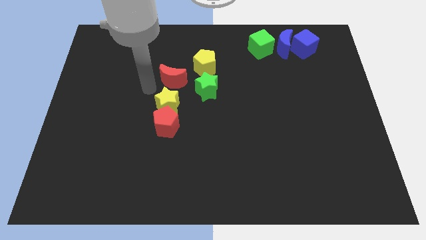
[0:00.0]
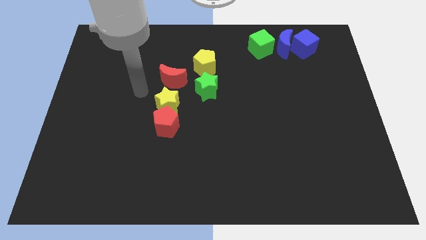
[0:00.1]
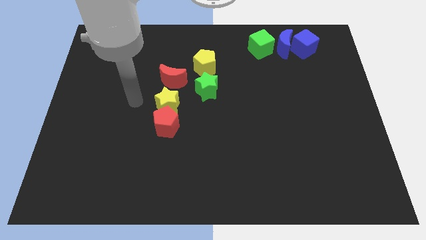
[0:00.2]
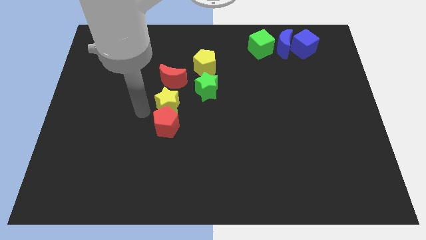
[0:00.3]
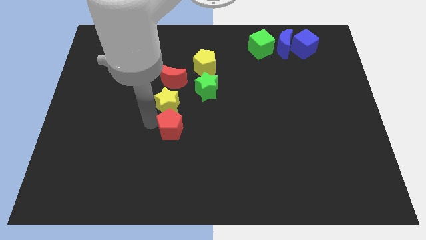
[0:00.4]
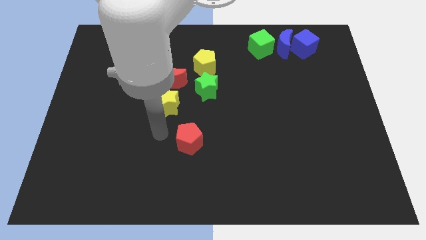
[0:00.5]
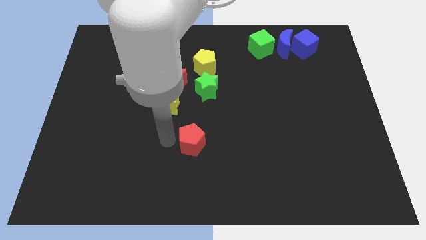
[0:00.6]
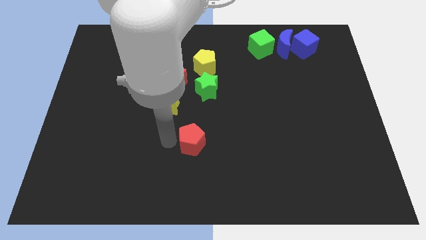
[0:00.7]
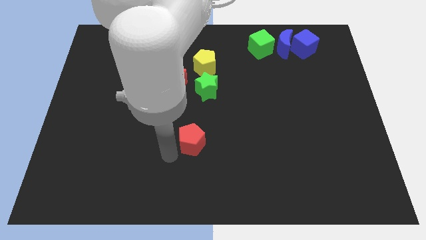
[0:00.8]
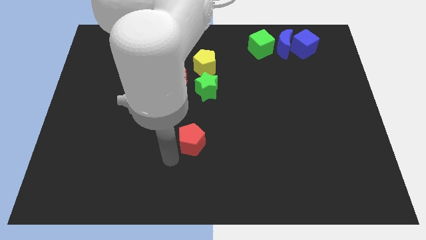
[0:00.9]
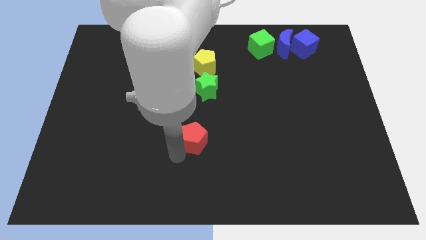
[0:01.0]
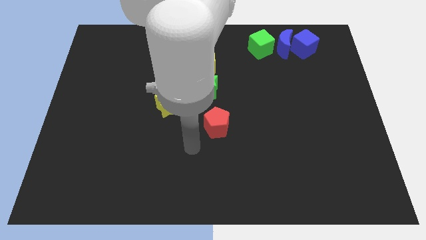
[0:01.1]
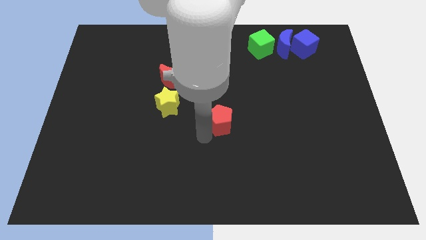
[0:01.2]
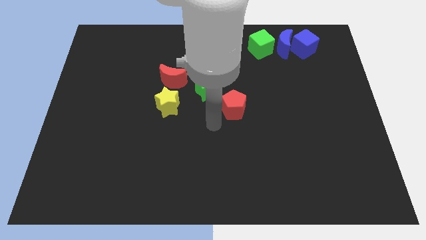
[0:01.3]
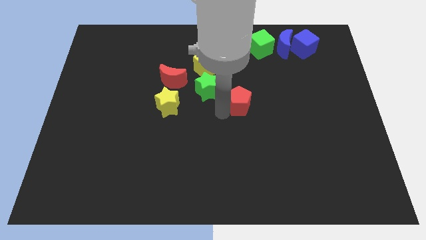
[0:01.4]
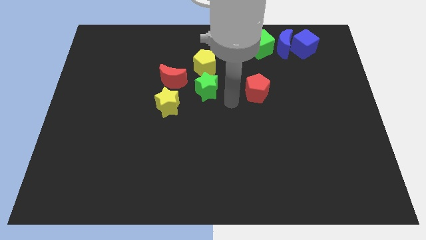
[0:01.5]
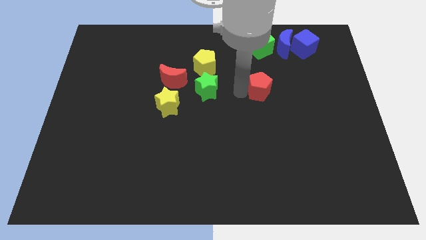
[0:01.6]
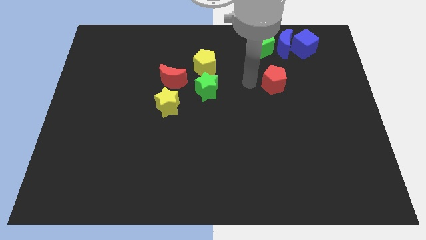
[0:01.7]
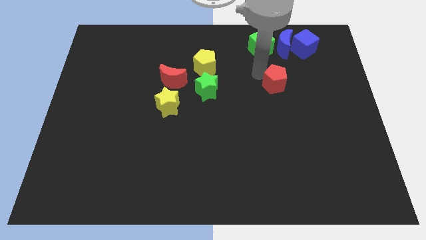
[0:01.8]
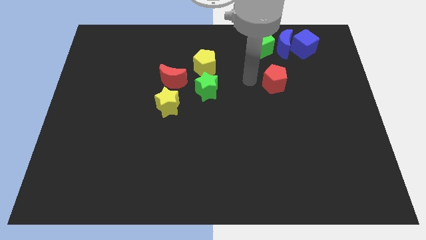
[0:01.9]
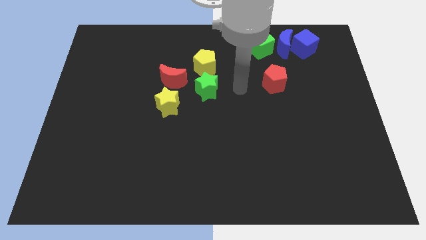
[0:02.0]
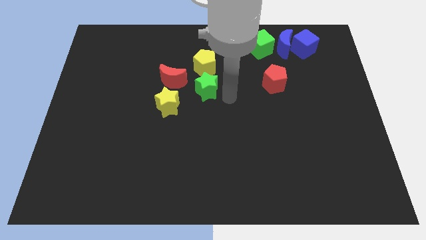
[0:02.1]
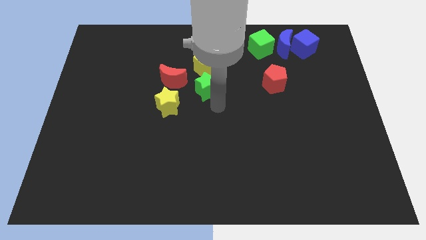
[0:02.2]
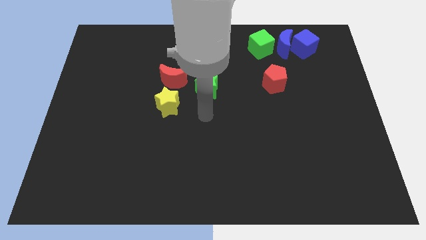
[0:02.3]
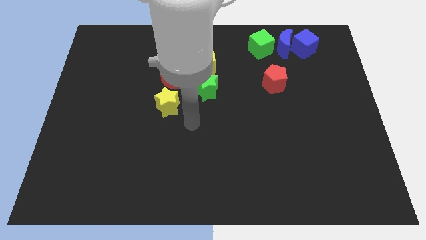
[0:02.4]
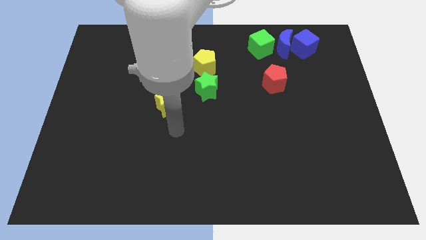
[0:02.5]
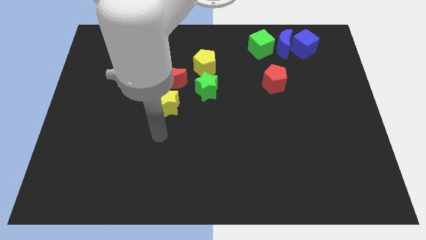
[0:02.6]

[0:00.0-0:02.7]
place the red pentagon at the bottom of the blue crescent

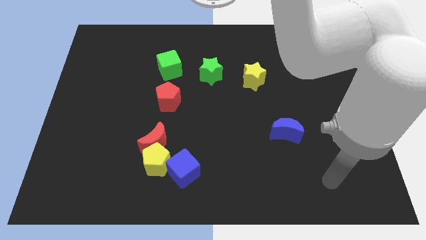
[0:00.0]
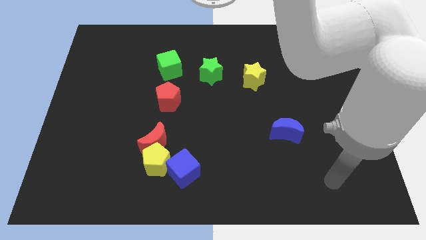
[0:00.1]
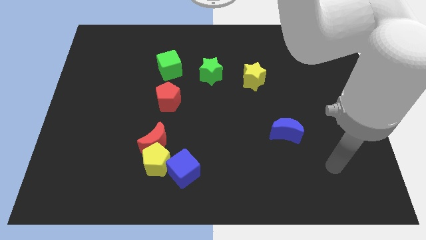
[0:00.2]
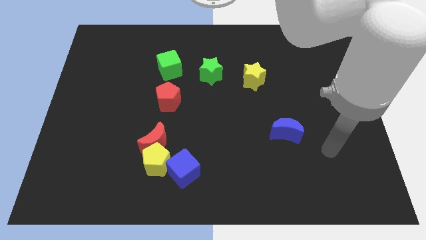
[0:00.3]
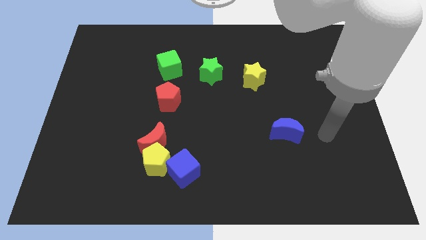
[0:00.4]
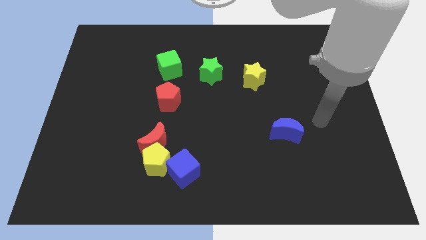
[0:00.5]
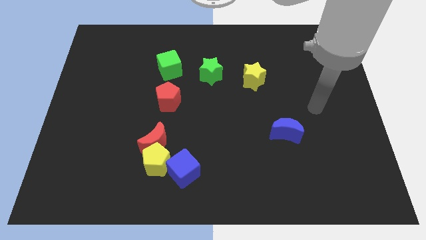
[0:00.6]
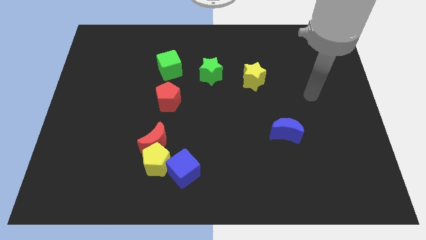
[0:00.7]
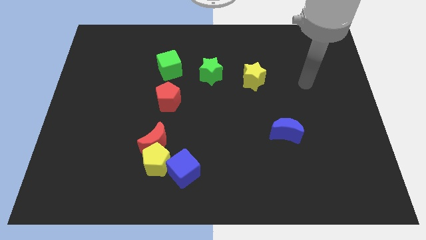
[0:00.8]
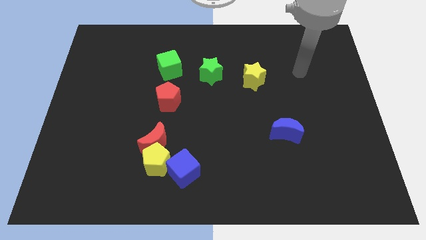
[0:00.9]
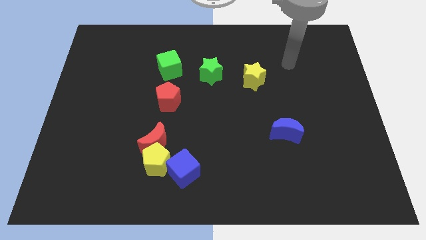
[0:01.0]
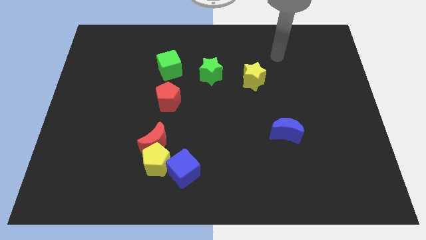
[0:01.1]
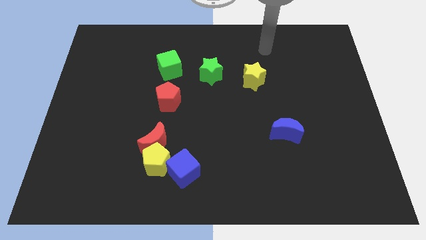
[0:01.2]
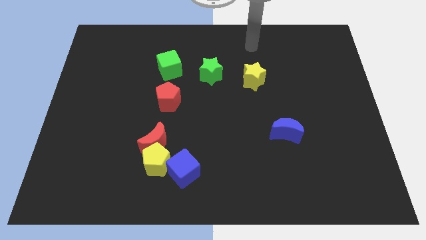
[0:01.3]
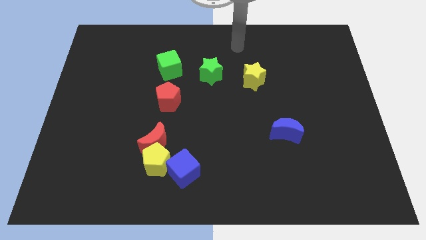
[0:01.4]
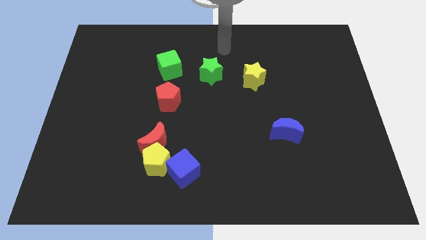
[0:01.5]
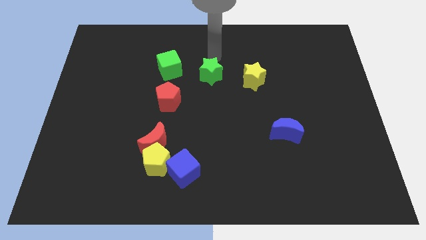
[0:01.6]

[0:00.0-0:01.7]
point your arm above green star

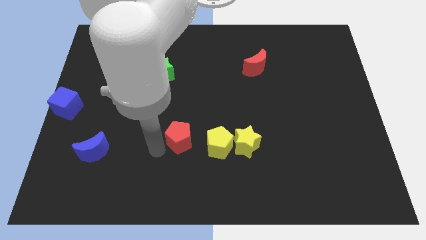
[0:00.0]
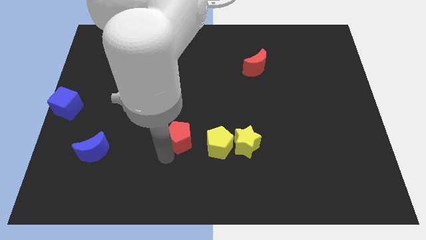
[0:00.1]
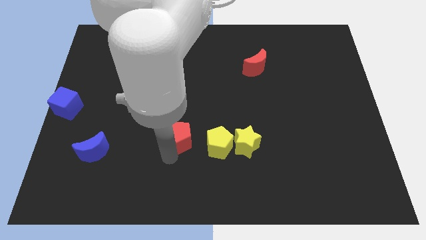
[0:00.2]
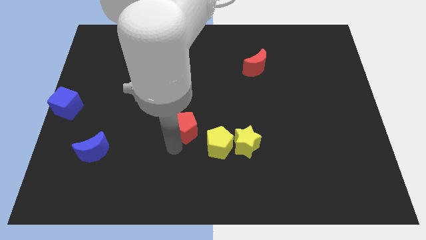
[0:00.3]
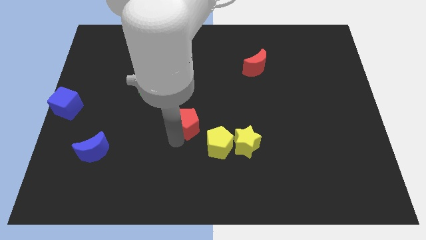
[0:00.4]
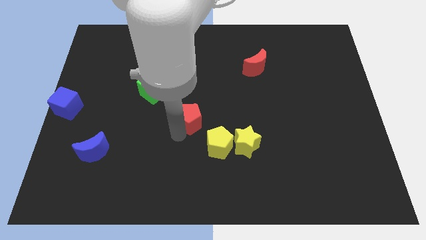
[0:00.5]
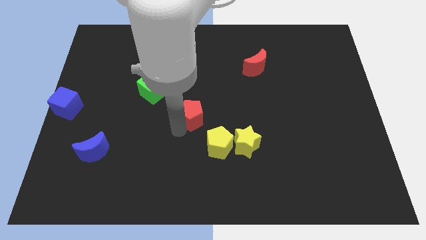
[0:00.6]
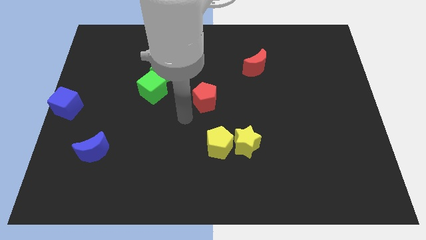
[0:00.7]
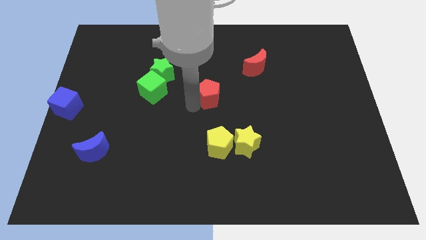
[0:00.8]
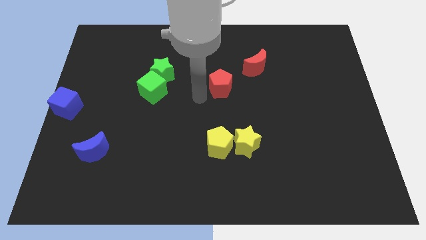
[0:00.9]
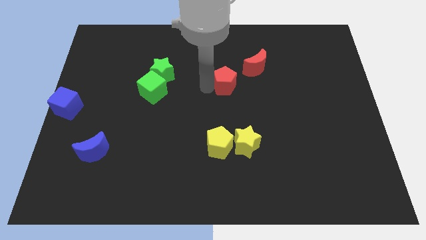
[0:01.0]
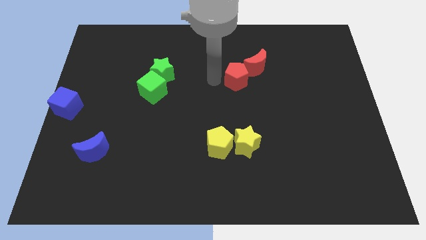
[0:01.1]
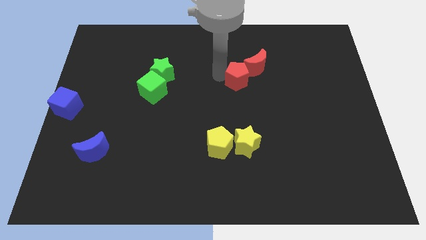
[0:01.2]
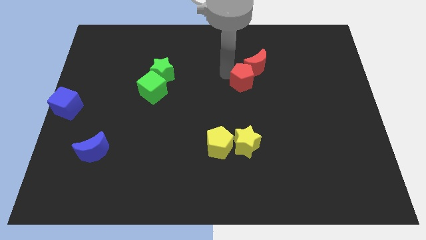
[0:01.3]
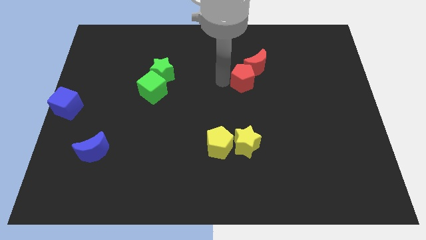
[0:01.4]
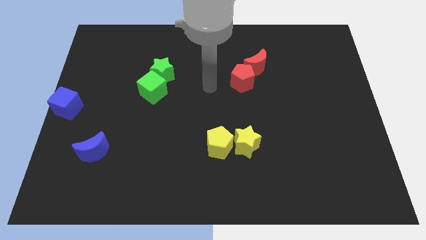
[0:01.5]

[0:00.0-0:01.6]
move the red pentagon into red moon

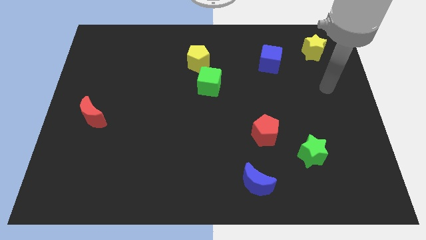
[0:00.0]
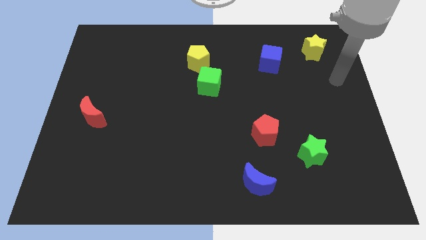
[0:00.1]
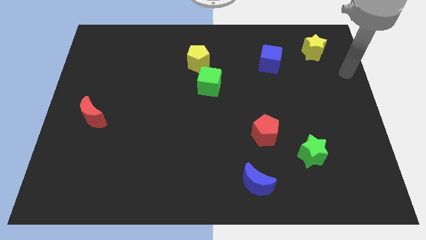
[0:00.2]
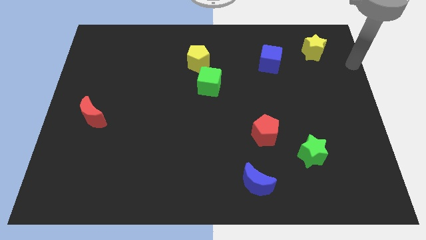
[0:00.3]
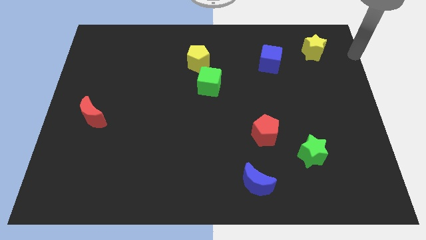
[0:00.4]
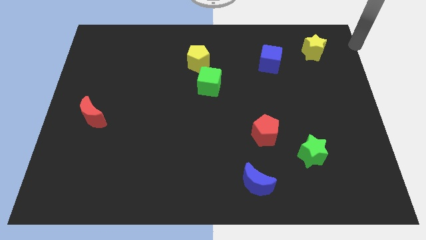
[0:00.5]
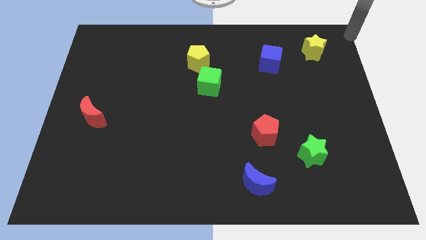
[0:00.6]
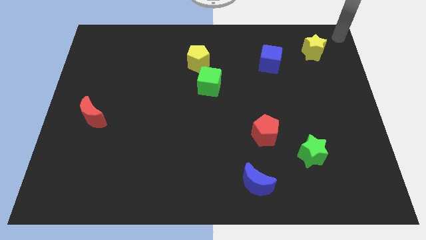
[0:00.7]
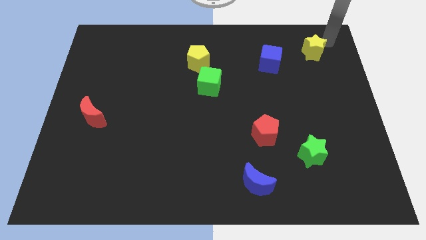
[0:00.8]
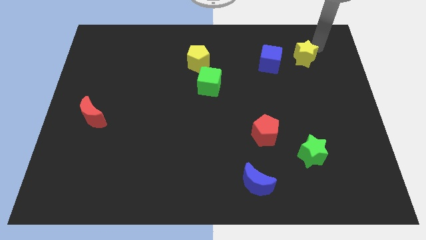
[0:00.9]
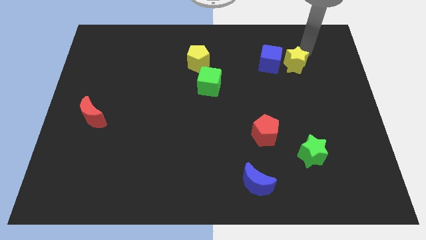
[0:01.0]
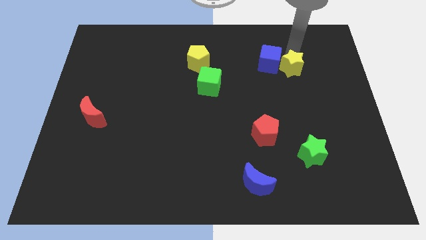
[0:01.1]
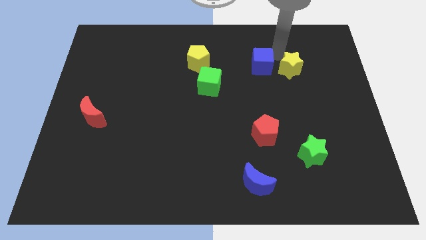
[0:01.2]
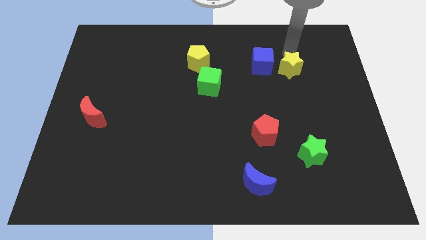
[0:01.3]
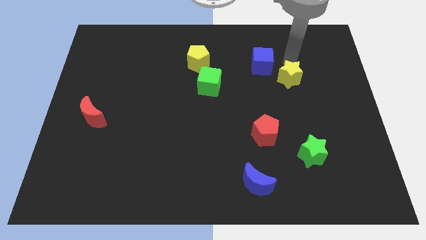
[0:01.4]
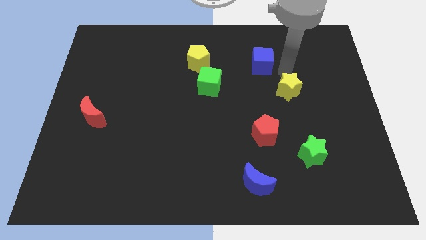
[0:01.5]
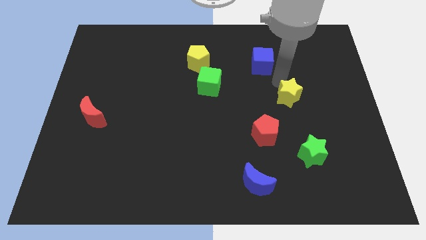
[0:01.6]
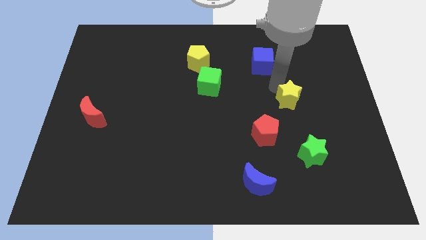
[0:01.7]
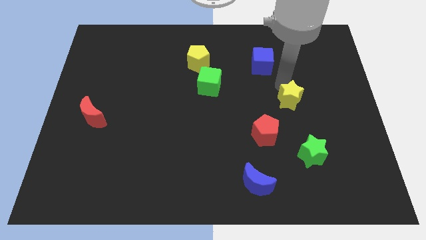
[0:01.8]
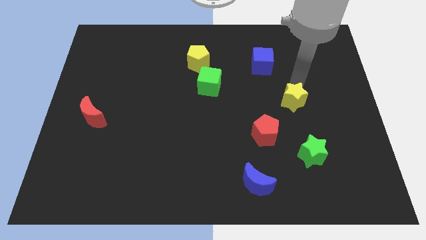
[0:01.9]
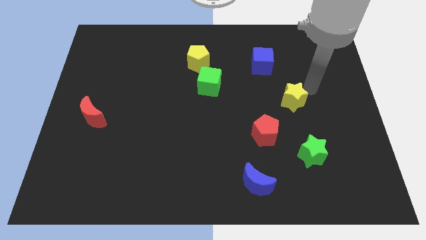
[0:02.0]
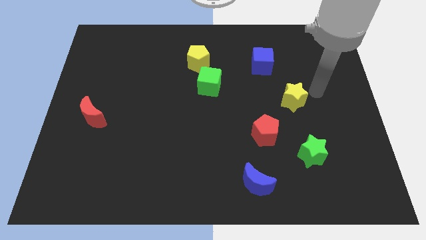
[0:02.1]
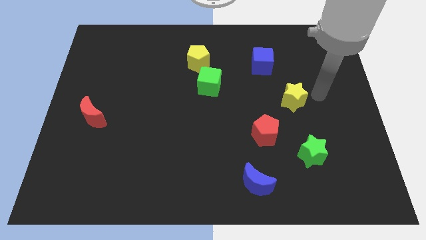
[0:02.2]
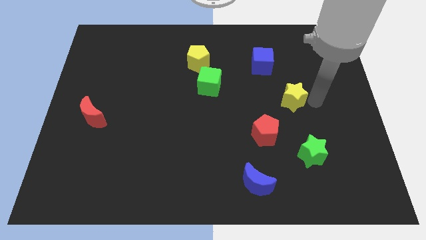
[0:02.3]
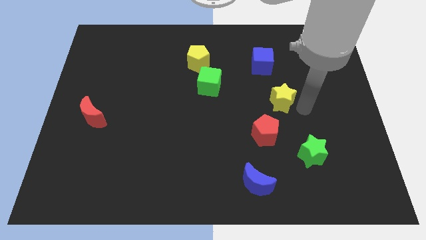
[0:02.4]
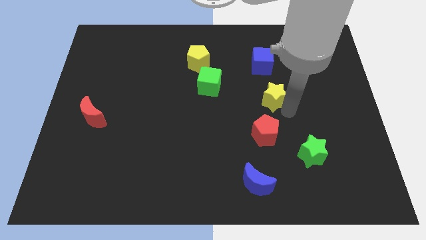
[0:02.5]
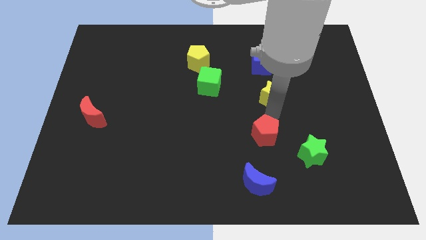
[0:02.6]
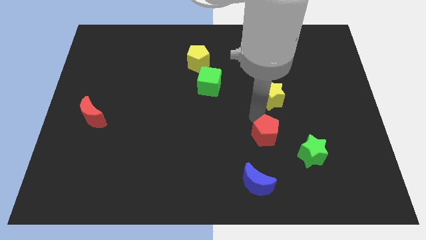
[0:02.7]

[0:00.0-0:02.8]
place the yellow star above the red pentagon
